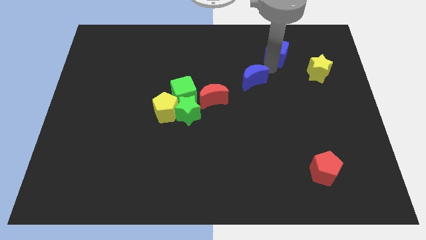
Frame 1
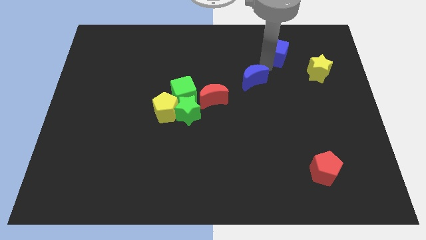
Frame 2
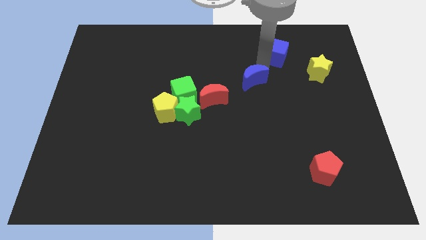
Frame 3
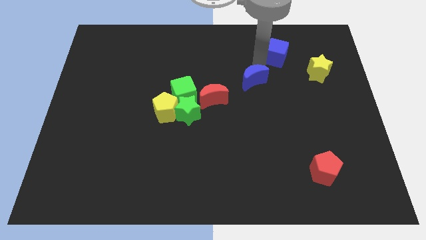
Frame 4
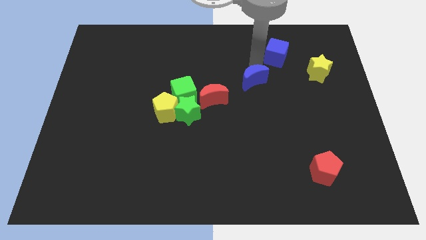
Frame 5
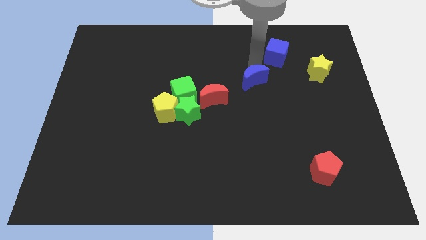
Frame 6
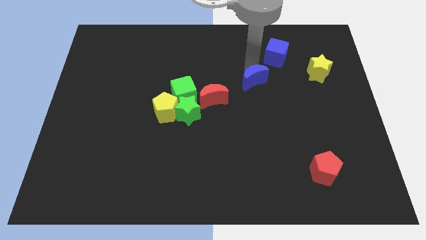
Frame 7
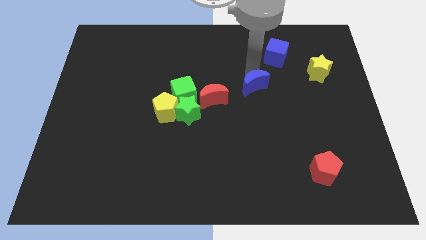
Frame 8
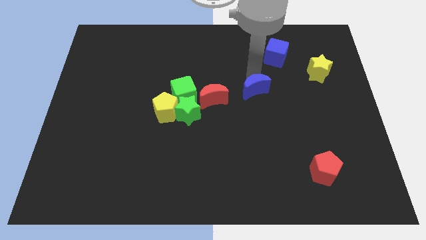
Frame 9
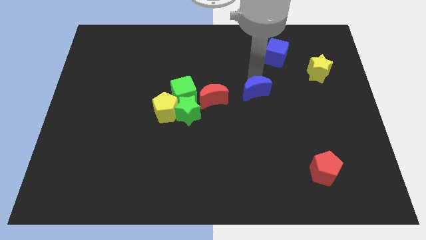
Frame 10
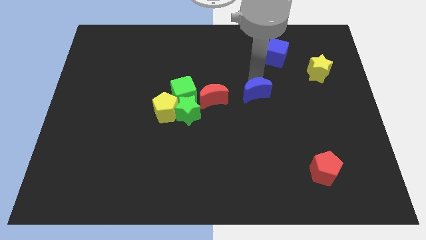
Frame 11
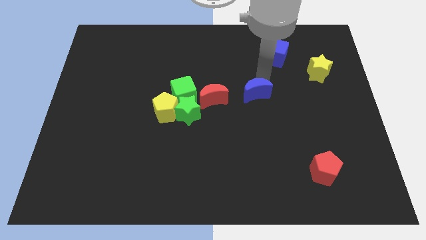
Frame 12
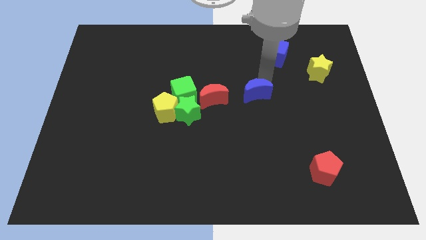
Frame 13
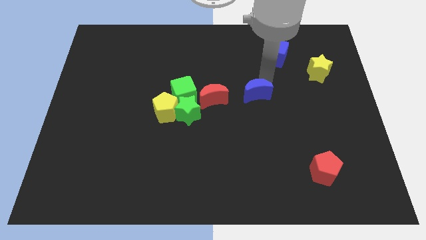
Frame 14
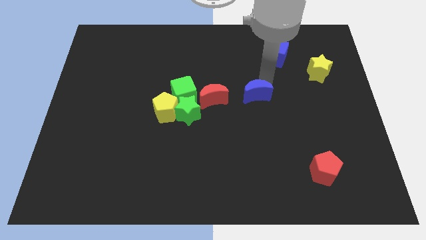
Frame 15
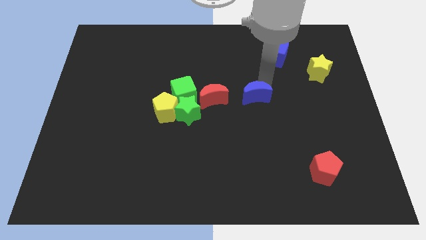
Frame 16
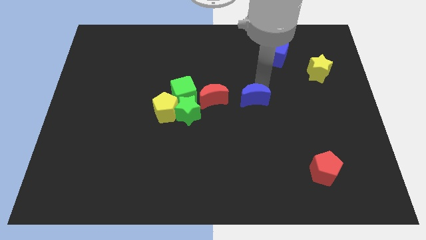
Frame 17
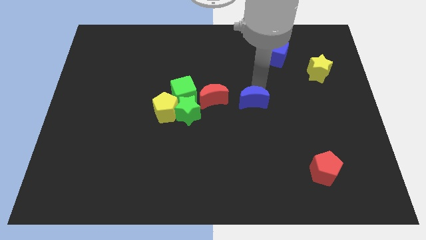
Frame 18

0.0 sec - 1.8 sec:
push the blue crescent to the right of the red crescent

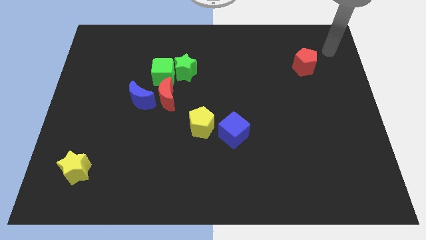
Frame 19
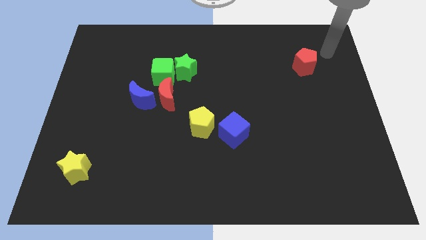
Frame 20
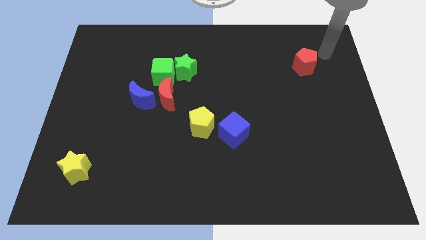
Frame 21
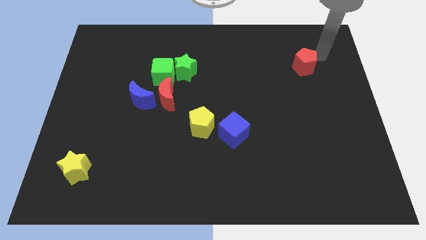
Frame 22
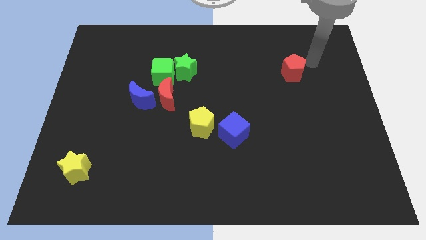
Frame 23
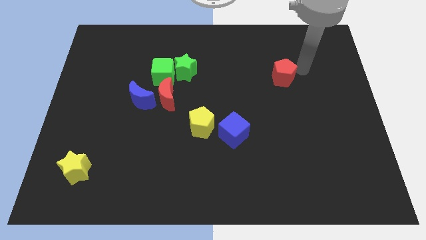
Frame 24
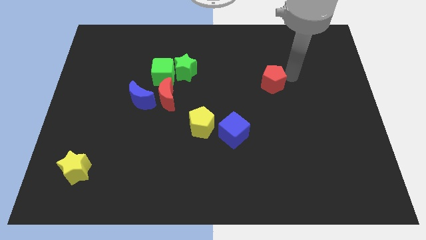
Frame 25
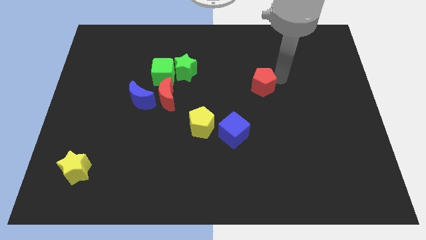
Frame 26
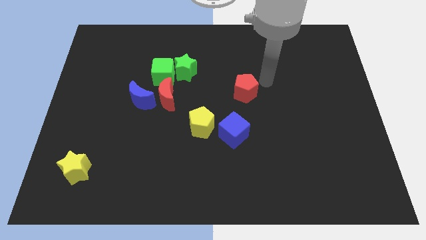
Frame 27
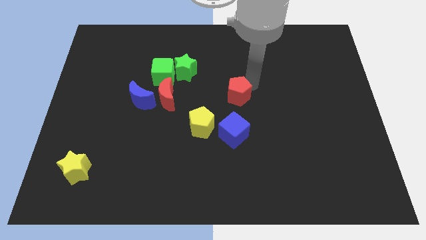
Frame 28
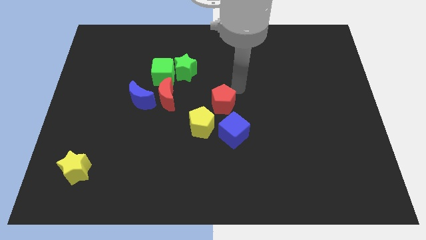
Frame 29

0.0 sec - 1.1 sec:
push the red pentagon close to the yellow pentagon

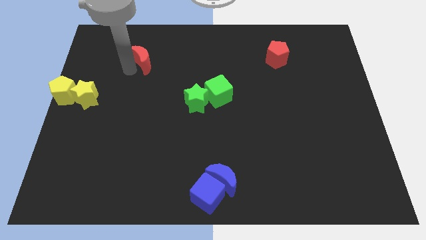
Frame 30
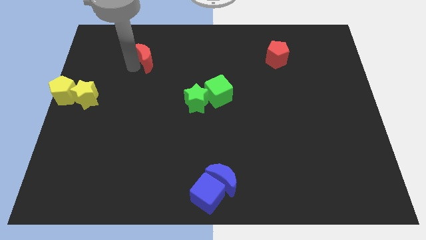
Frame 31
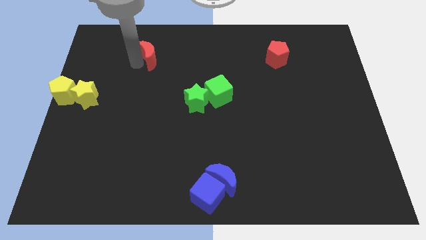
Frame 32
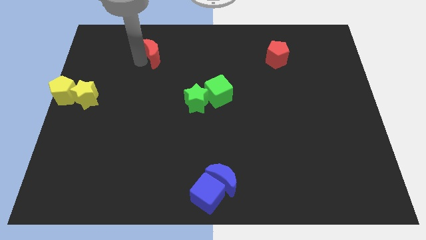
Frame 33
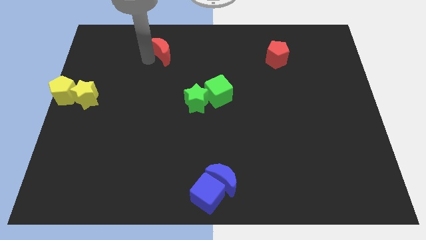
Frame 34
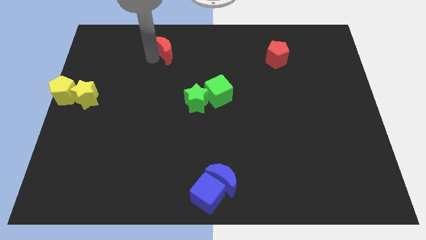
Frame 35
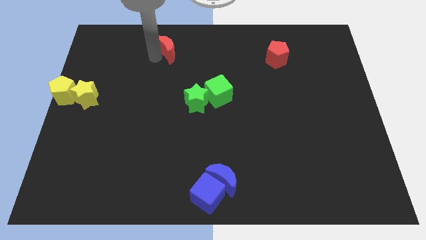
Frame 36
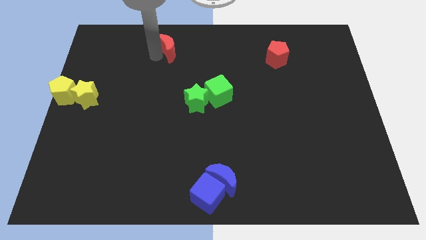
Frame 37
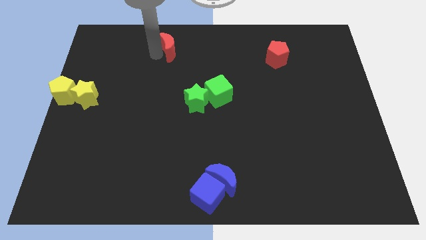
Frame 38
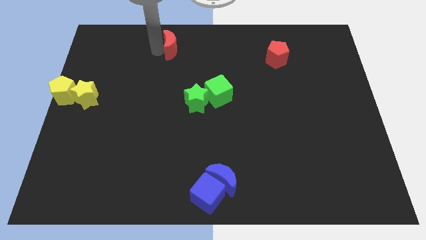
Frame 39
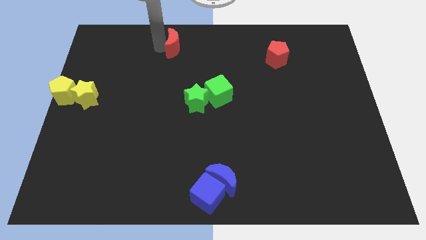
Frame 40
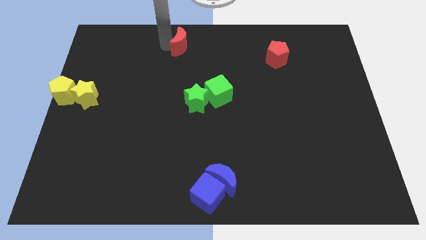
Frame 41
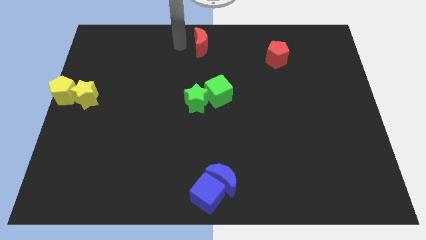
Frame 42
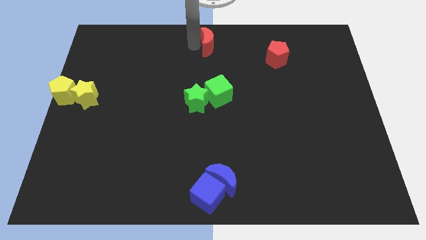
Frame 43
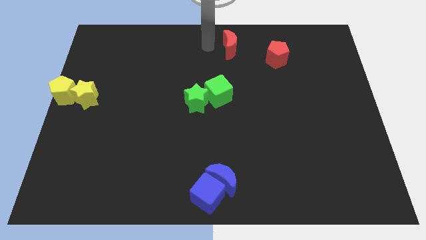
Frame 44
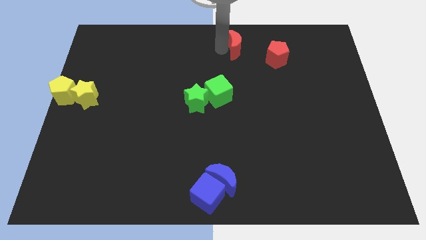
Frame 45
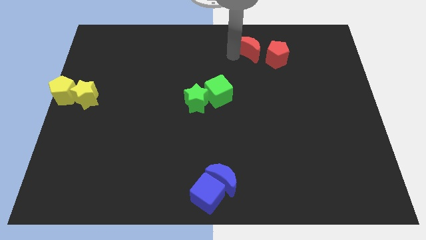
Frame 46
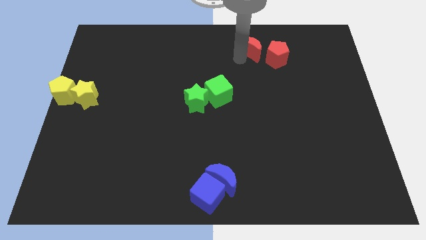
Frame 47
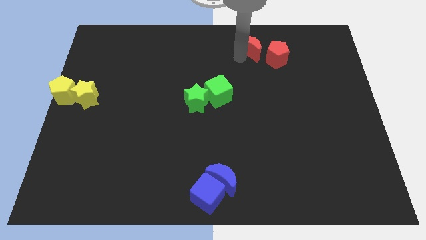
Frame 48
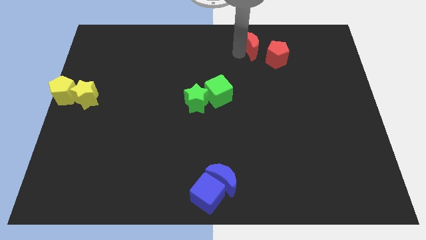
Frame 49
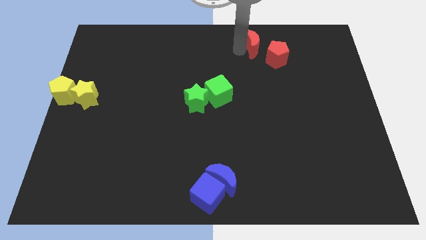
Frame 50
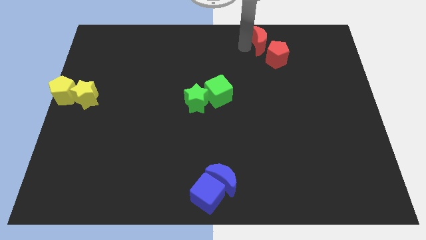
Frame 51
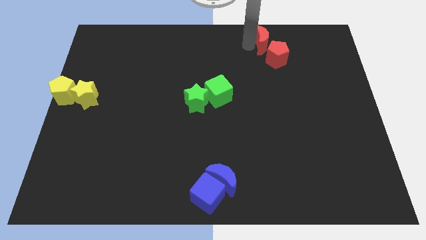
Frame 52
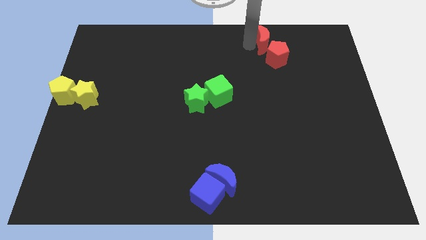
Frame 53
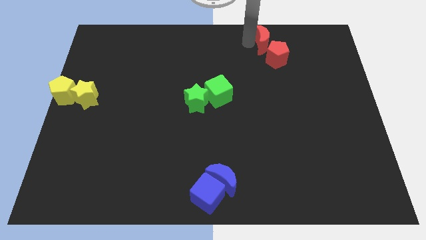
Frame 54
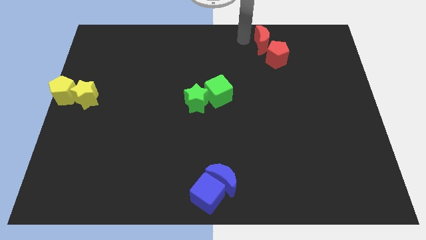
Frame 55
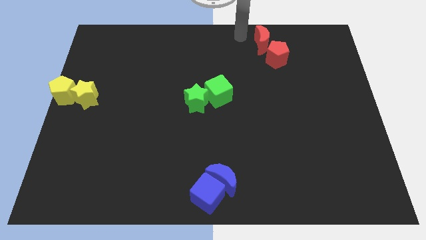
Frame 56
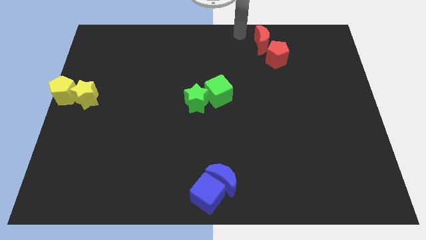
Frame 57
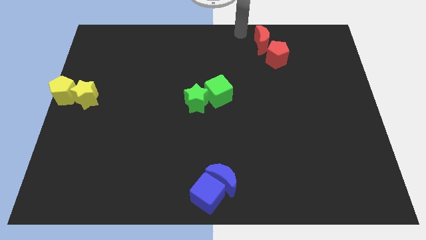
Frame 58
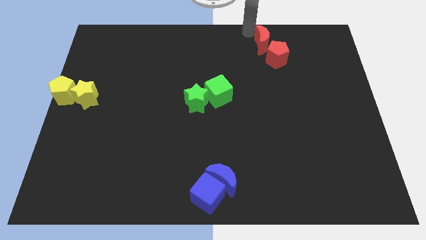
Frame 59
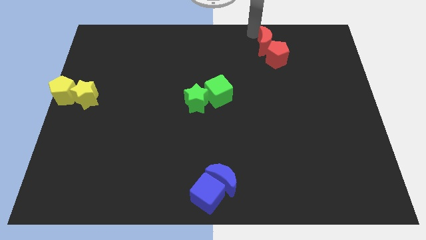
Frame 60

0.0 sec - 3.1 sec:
move the red crescent above the red pentagon

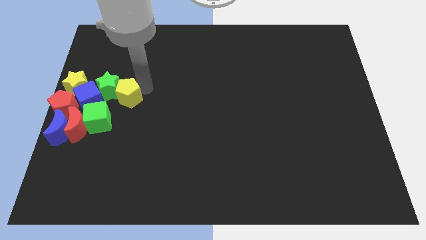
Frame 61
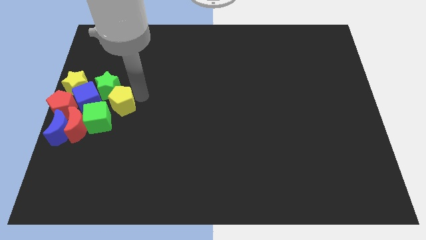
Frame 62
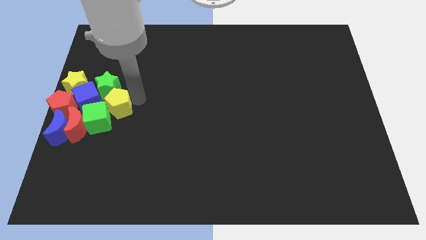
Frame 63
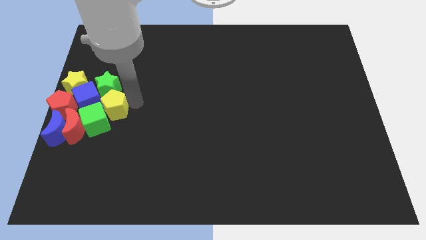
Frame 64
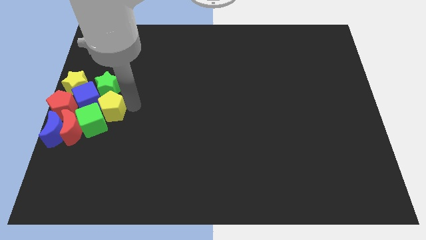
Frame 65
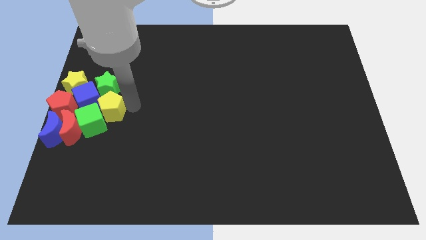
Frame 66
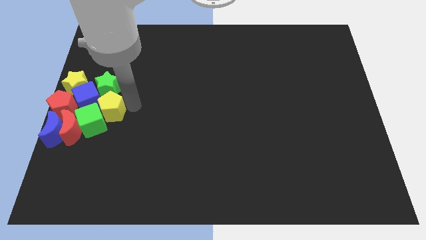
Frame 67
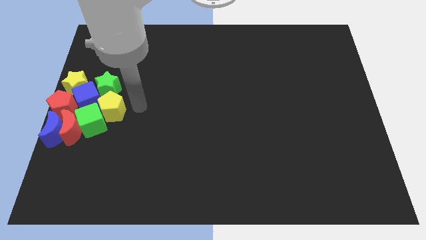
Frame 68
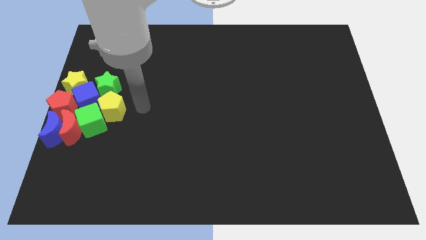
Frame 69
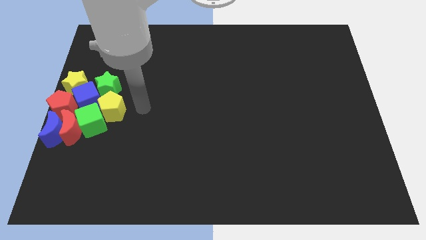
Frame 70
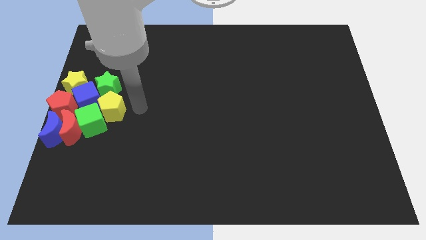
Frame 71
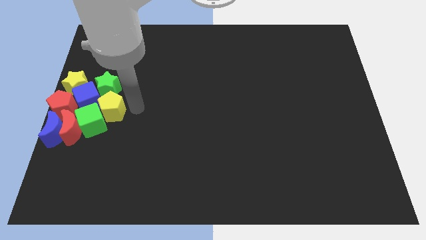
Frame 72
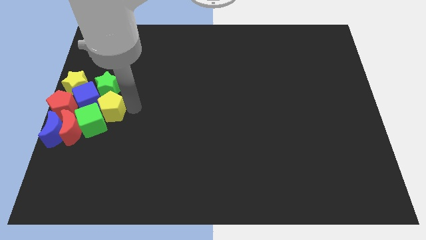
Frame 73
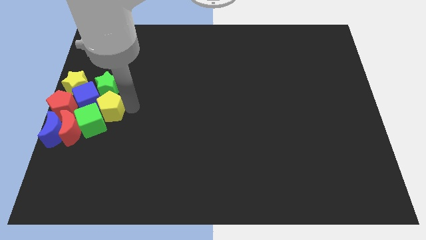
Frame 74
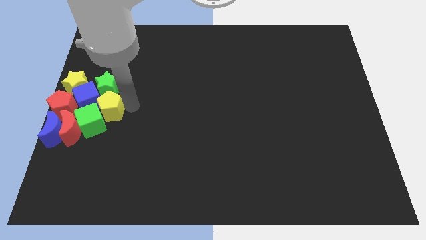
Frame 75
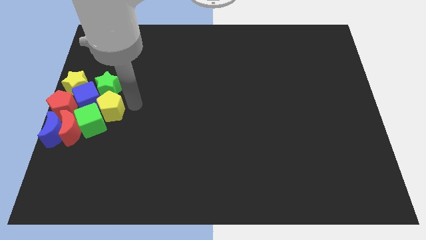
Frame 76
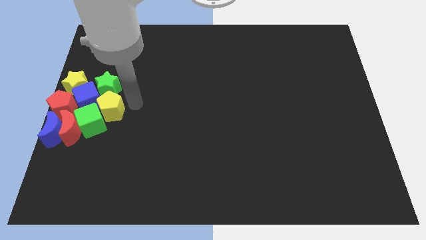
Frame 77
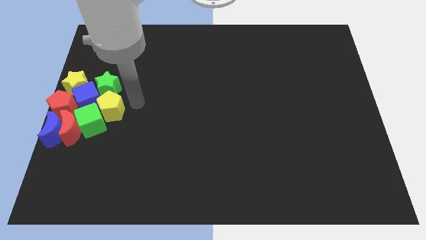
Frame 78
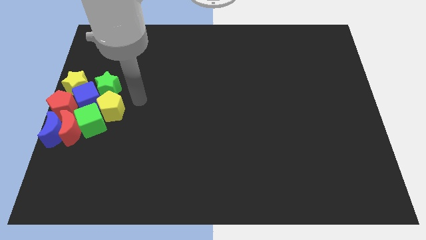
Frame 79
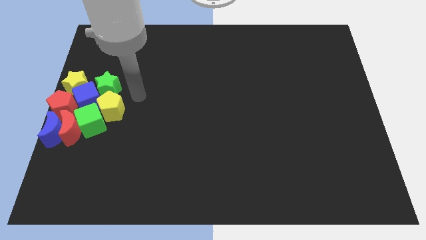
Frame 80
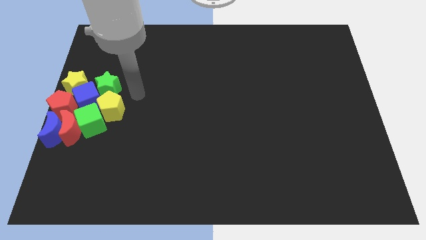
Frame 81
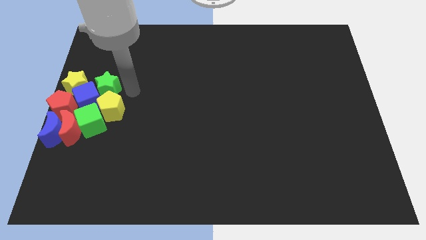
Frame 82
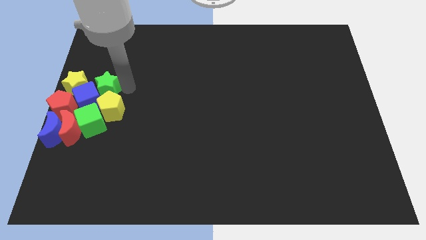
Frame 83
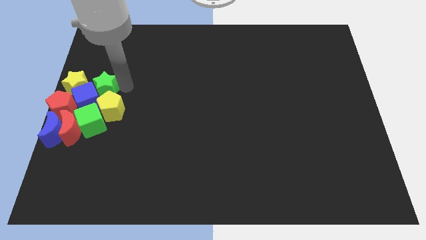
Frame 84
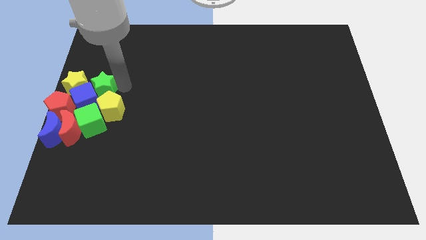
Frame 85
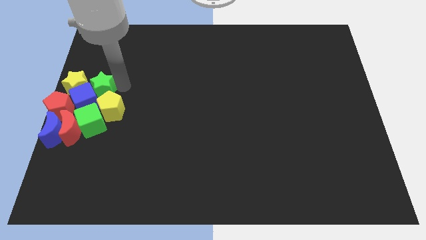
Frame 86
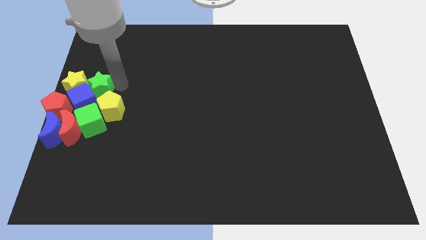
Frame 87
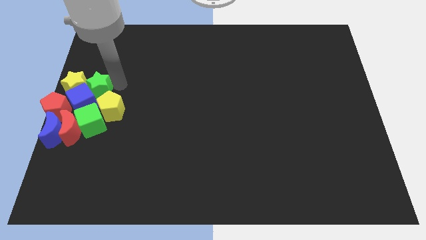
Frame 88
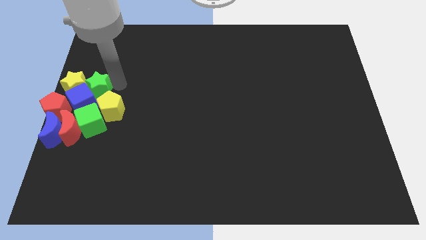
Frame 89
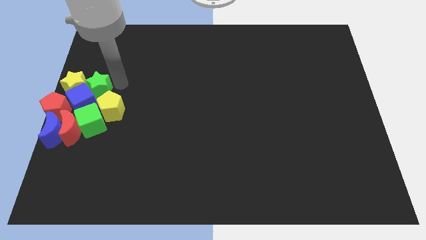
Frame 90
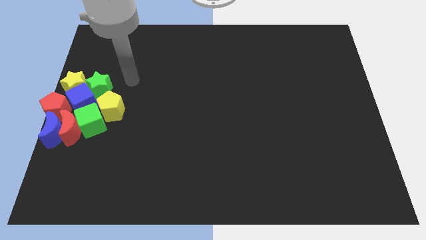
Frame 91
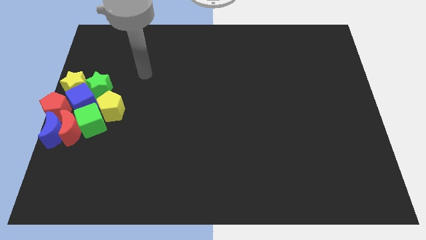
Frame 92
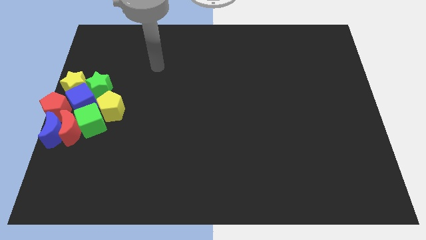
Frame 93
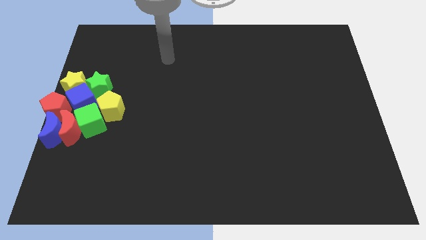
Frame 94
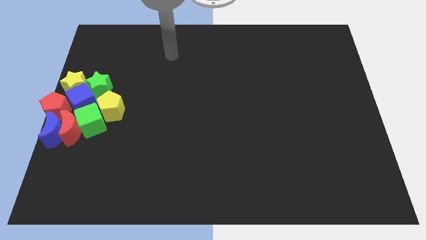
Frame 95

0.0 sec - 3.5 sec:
push the yellow pentagon towards the green cube
